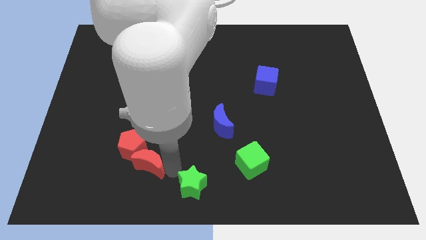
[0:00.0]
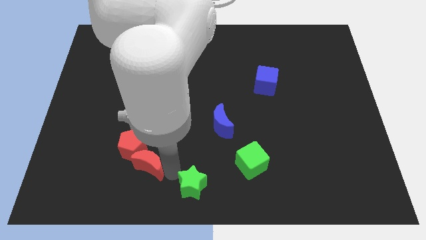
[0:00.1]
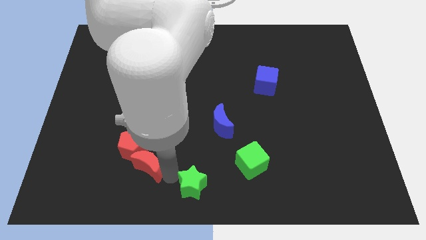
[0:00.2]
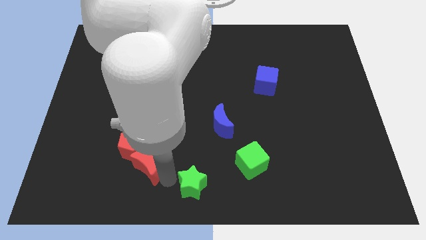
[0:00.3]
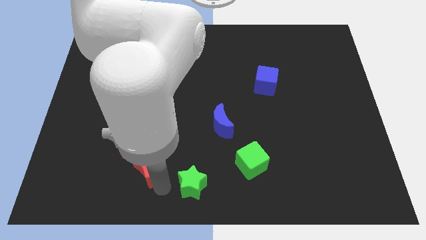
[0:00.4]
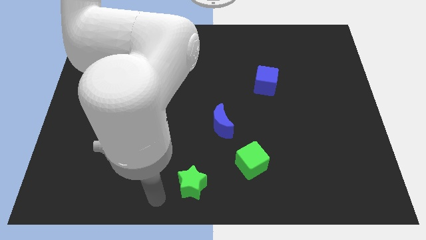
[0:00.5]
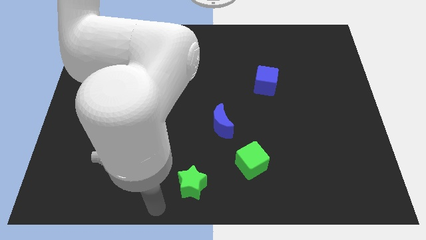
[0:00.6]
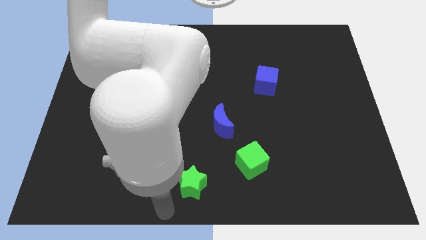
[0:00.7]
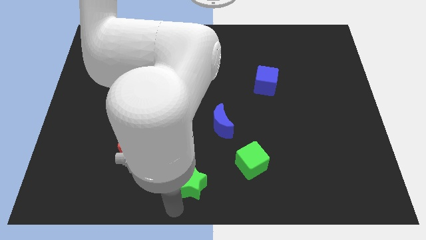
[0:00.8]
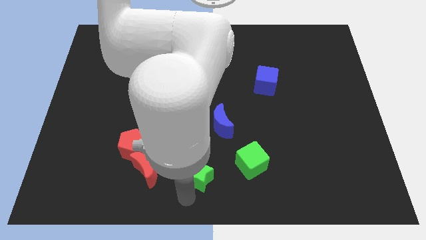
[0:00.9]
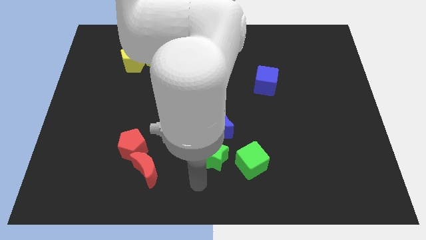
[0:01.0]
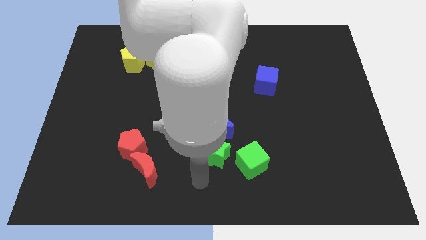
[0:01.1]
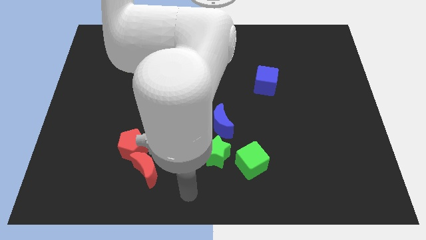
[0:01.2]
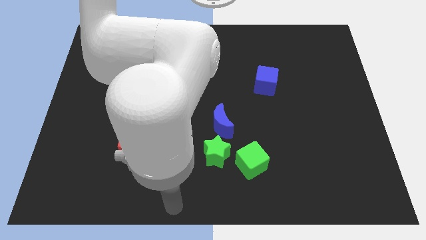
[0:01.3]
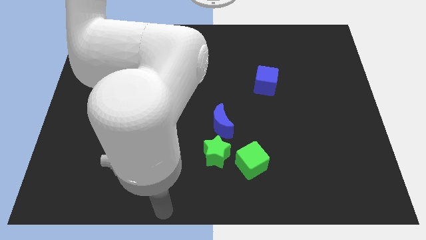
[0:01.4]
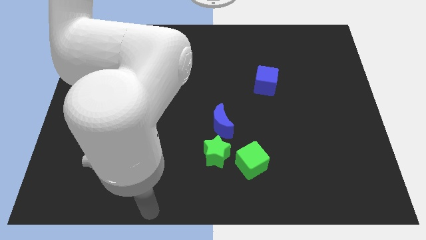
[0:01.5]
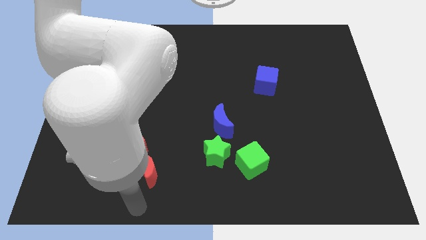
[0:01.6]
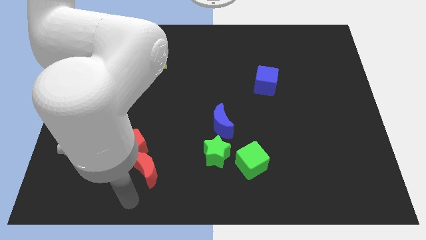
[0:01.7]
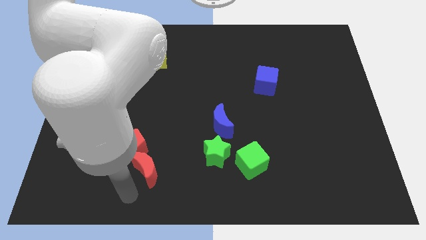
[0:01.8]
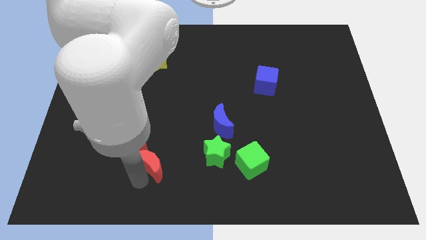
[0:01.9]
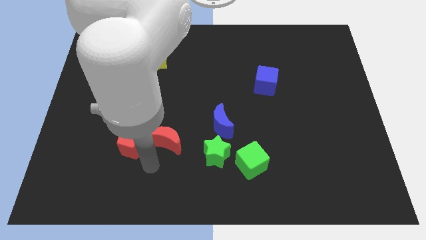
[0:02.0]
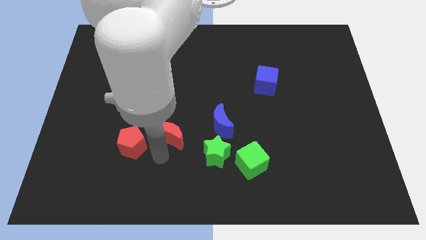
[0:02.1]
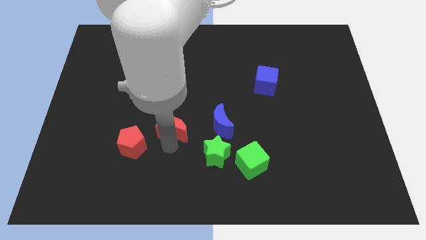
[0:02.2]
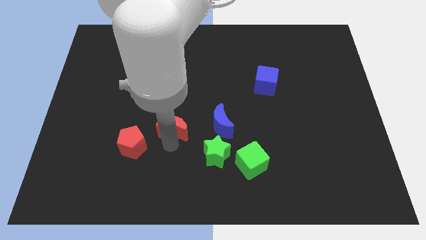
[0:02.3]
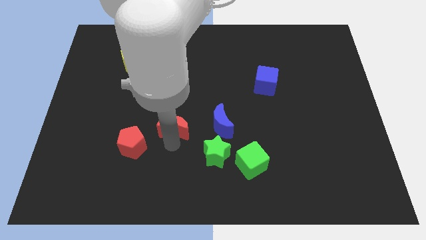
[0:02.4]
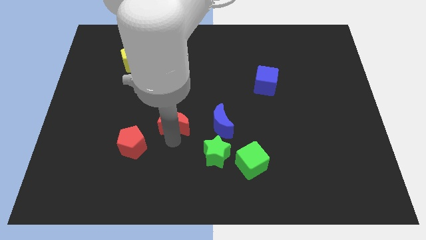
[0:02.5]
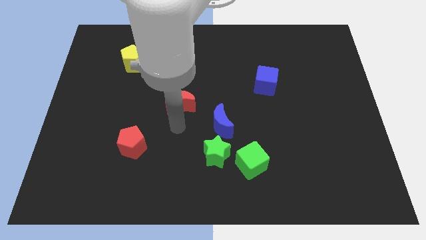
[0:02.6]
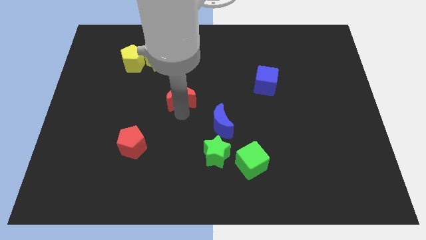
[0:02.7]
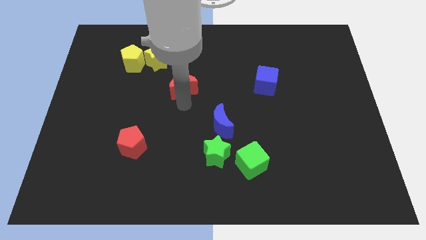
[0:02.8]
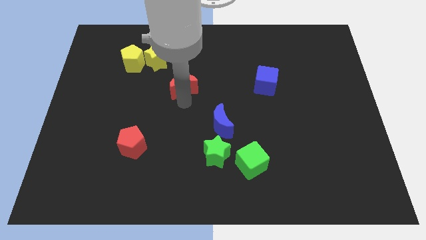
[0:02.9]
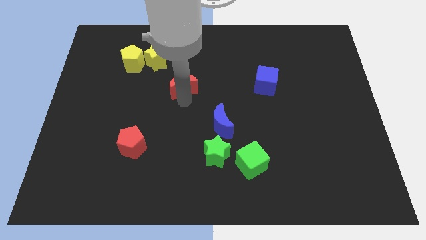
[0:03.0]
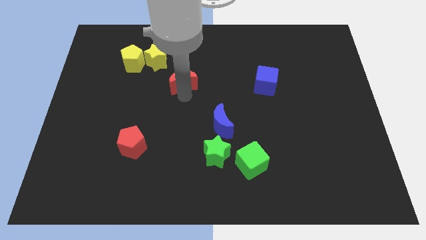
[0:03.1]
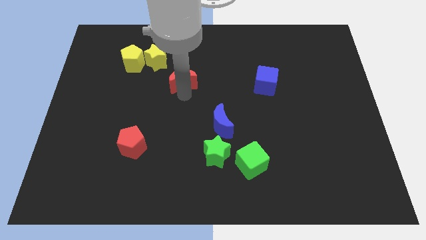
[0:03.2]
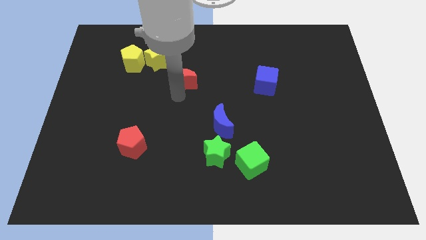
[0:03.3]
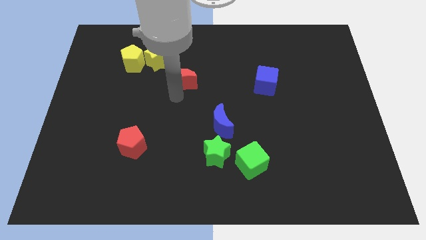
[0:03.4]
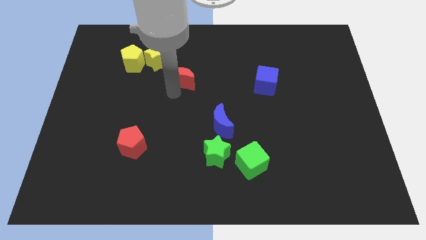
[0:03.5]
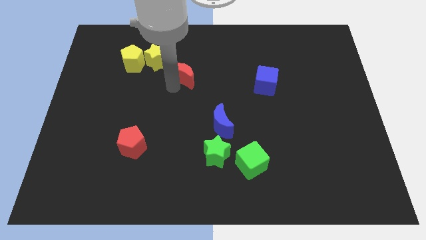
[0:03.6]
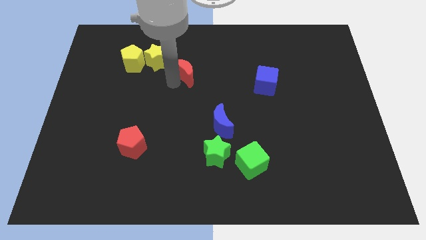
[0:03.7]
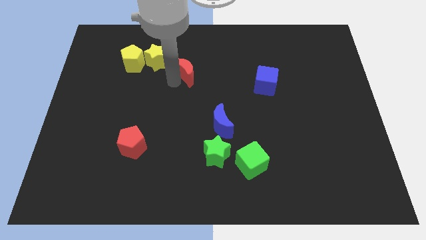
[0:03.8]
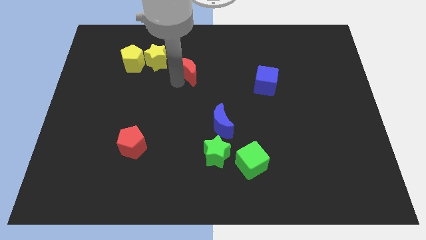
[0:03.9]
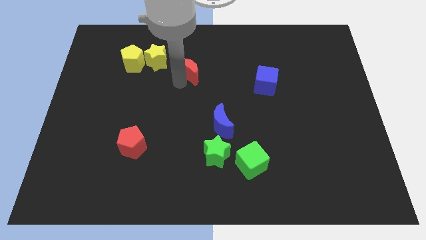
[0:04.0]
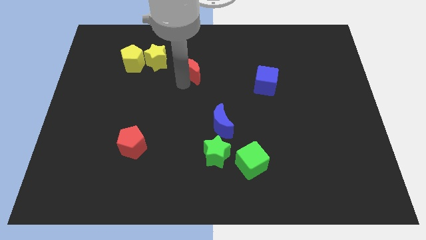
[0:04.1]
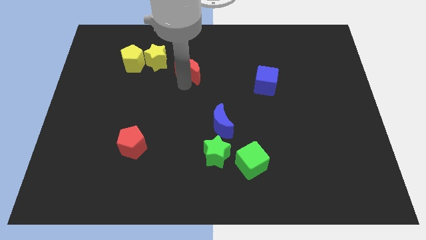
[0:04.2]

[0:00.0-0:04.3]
slide the red crescent to the left of the blue cube

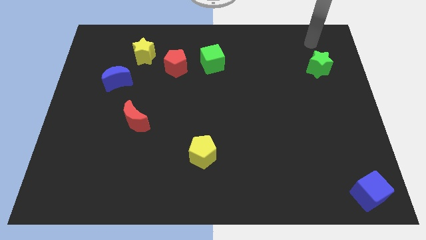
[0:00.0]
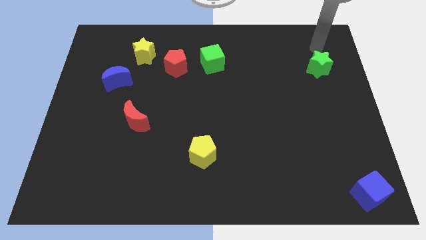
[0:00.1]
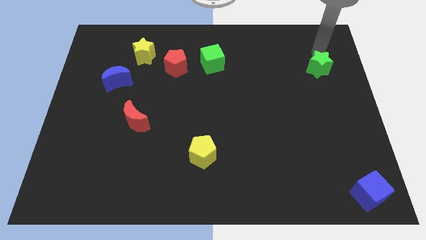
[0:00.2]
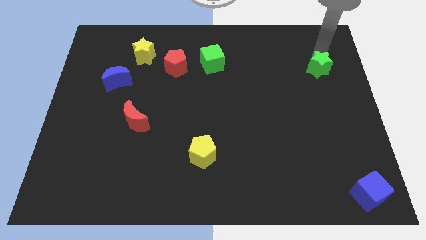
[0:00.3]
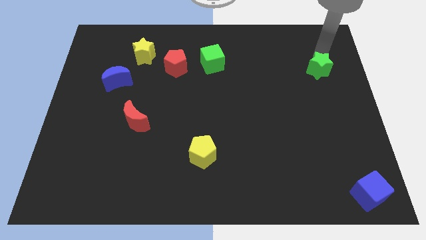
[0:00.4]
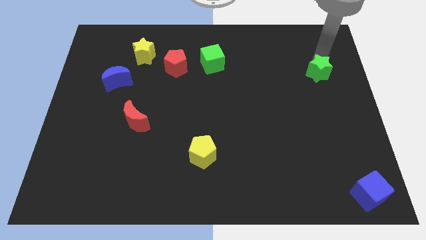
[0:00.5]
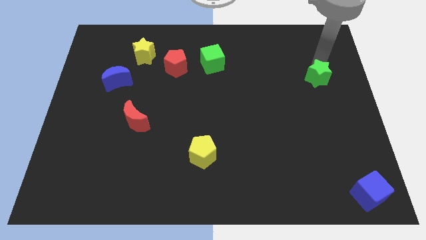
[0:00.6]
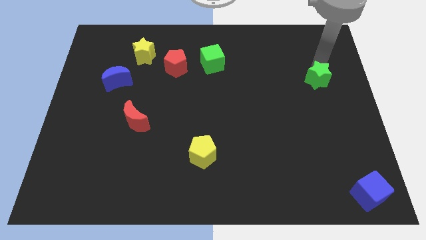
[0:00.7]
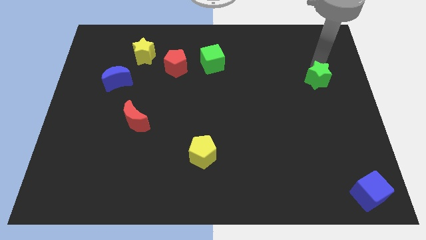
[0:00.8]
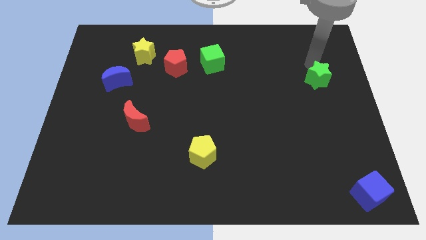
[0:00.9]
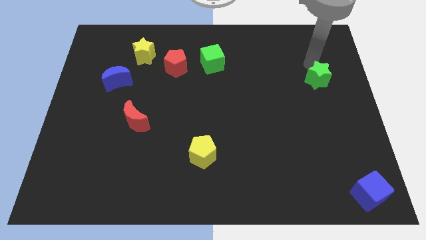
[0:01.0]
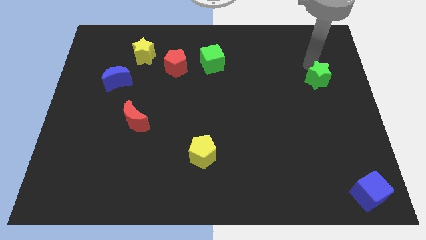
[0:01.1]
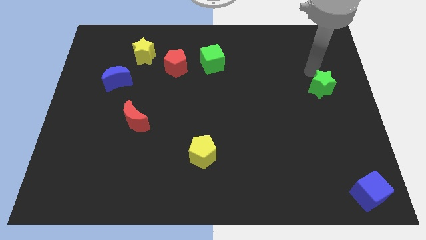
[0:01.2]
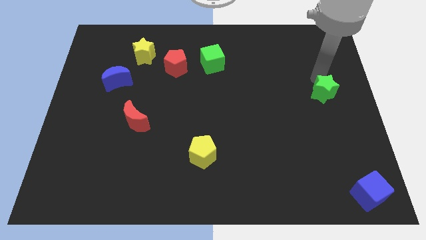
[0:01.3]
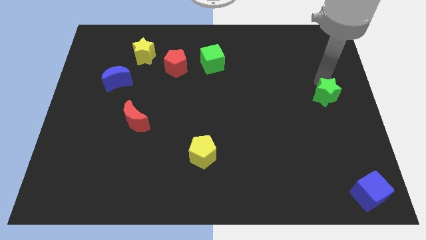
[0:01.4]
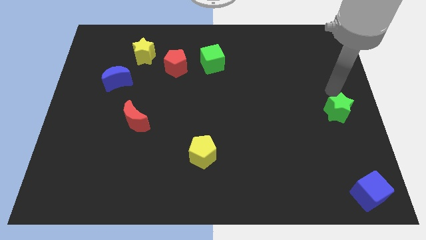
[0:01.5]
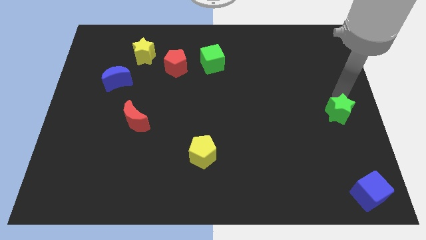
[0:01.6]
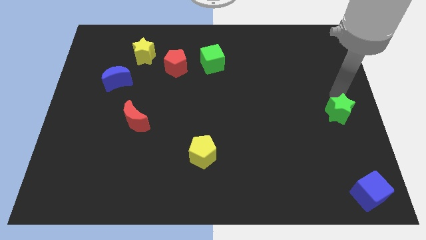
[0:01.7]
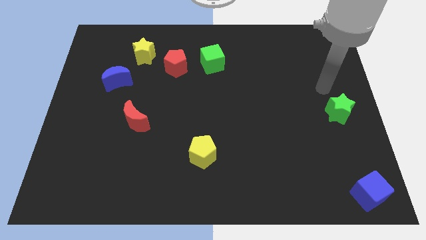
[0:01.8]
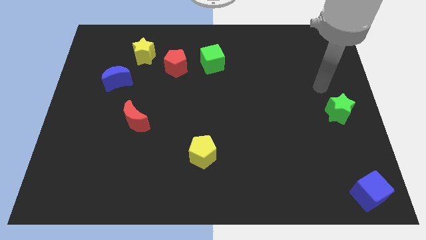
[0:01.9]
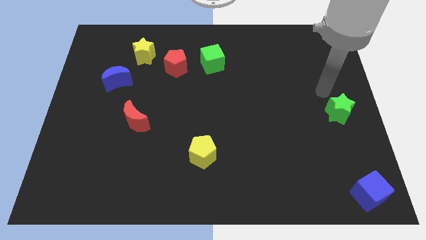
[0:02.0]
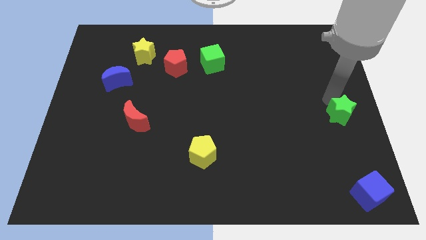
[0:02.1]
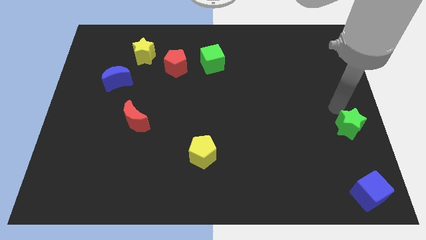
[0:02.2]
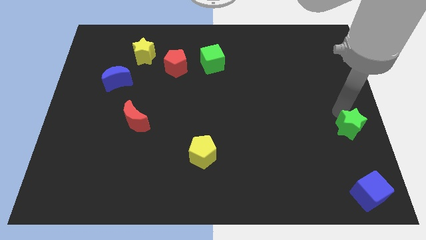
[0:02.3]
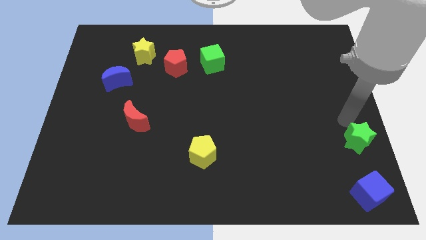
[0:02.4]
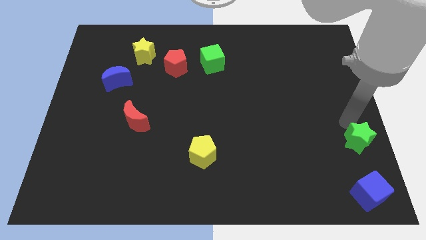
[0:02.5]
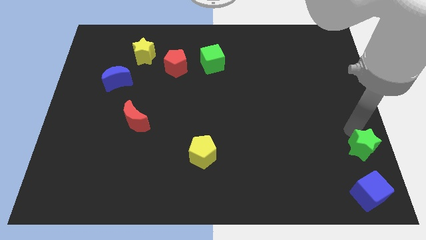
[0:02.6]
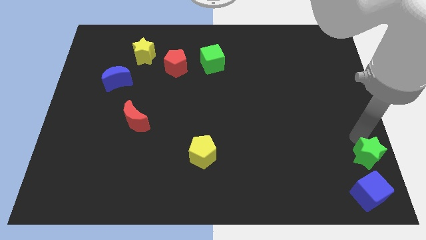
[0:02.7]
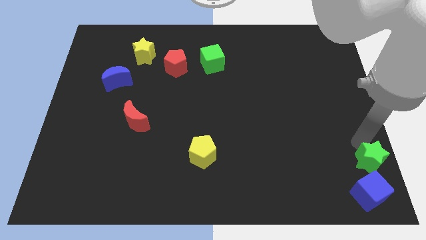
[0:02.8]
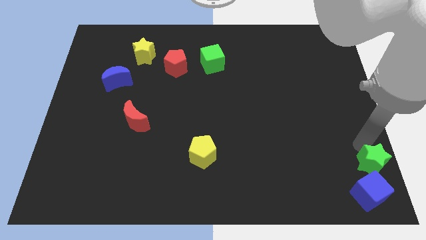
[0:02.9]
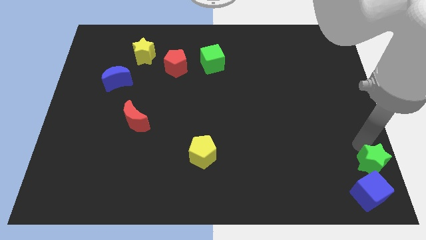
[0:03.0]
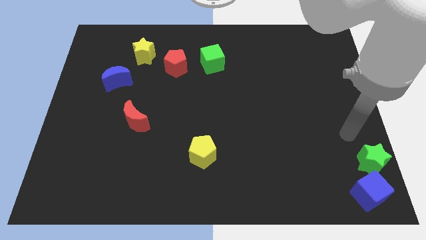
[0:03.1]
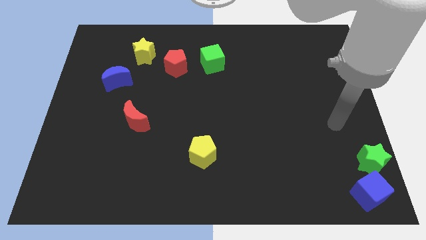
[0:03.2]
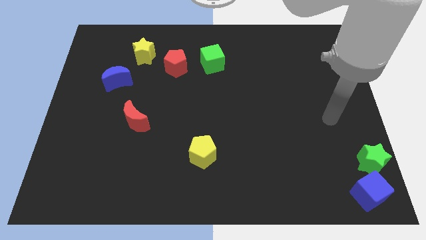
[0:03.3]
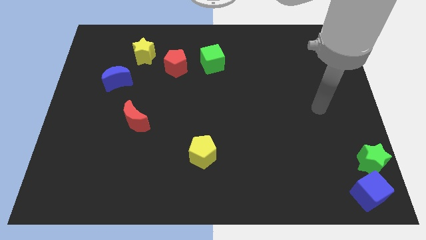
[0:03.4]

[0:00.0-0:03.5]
push the green star to the top side of the blue cube

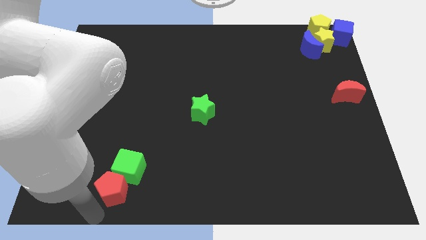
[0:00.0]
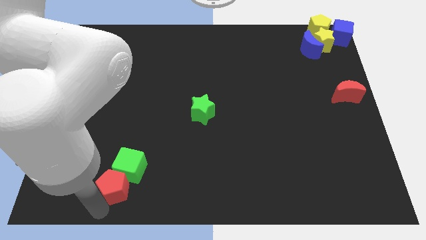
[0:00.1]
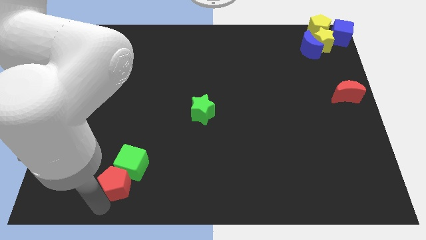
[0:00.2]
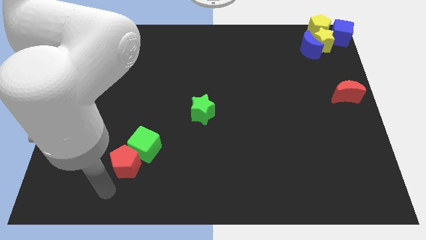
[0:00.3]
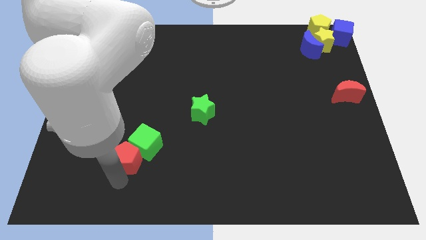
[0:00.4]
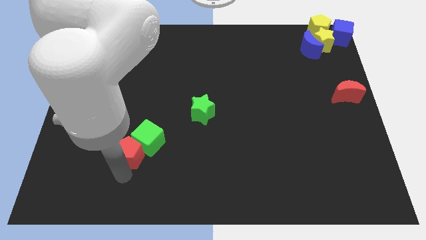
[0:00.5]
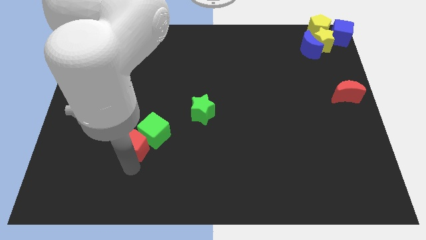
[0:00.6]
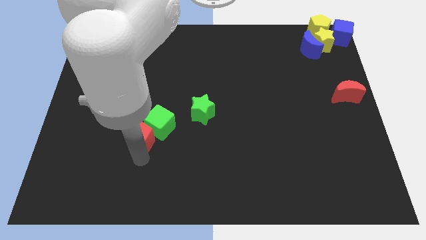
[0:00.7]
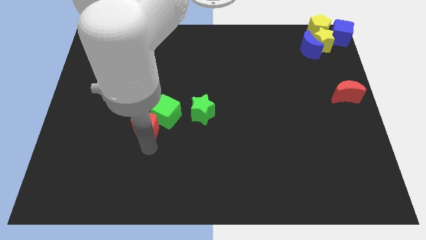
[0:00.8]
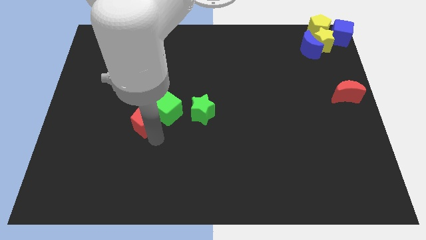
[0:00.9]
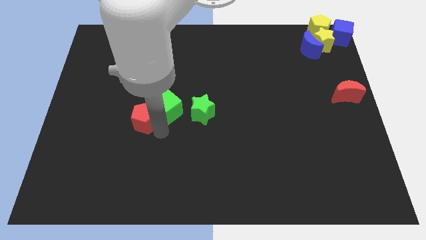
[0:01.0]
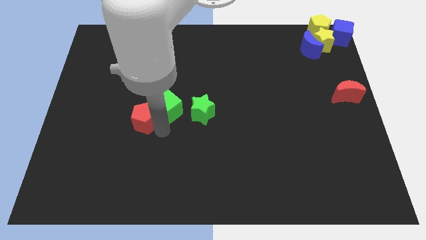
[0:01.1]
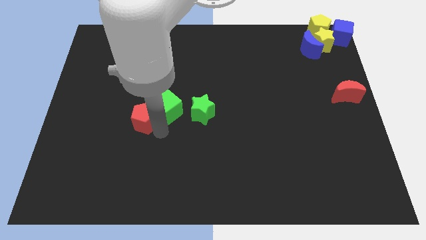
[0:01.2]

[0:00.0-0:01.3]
drag the red pentagongreen cube towards the center of the board

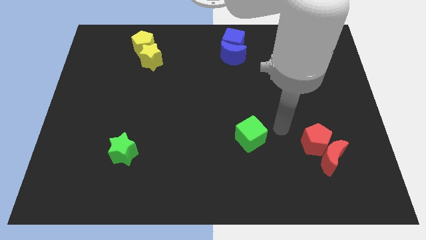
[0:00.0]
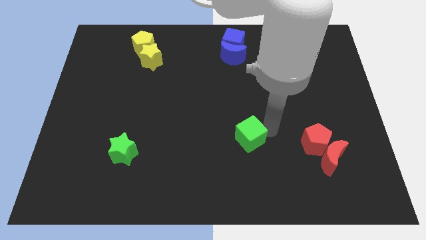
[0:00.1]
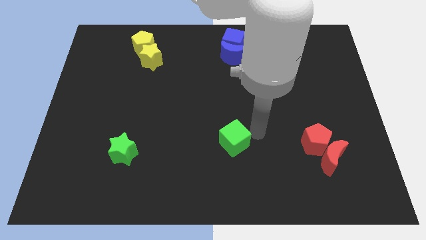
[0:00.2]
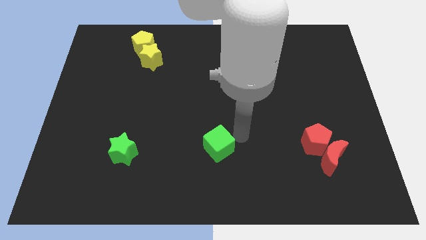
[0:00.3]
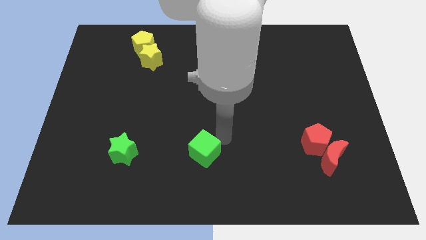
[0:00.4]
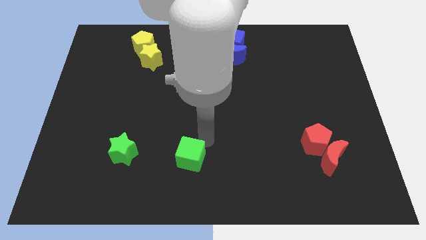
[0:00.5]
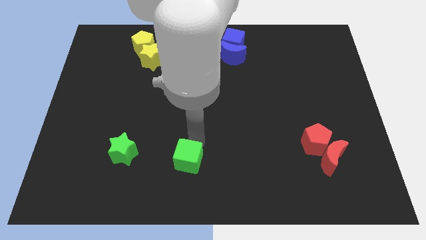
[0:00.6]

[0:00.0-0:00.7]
place green cube parallel to the green star
